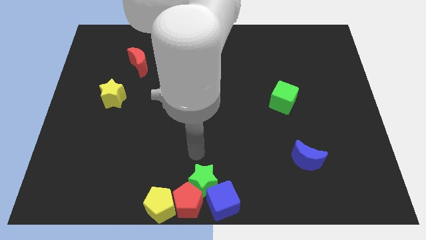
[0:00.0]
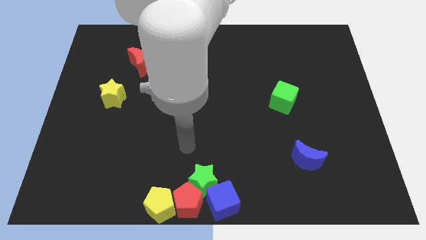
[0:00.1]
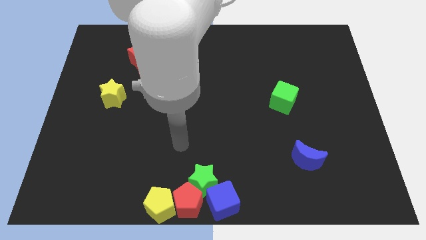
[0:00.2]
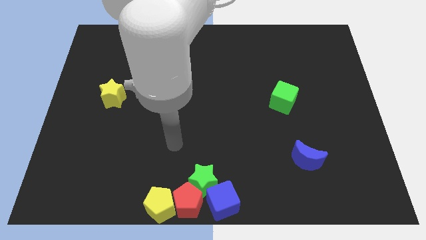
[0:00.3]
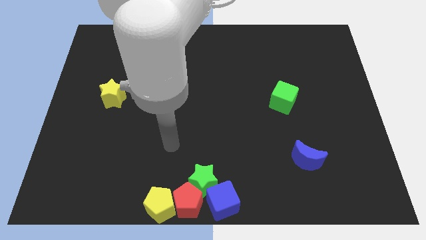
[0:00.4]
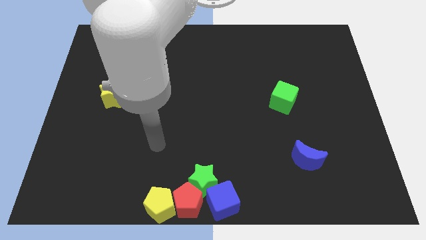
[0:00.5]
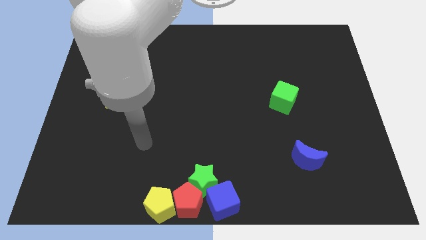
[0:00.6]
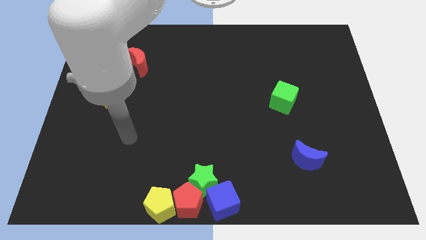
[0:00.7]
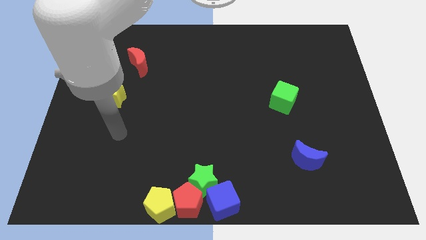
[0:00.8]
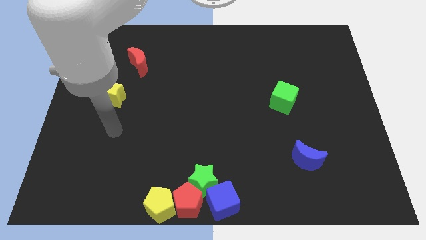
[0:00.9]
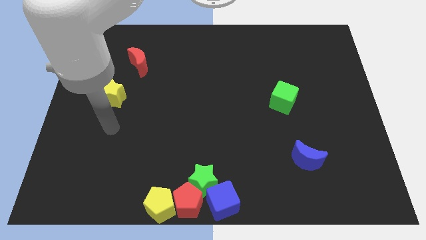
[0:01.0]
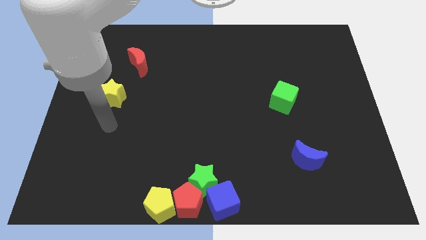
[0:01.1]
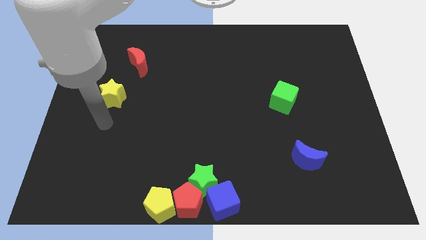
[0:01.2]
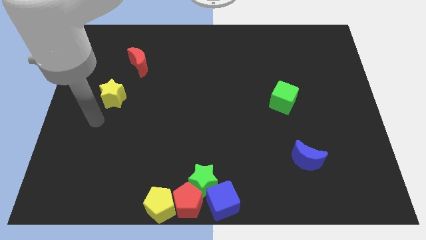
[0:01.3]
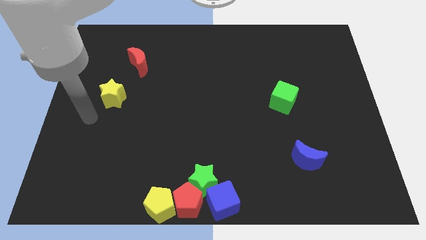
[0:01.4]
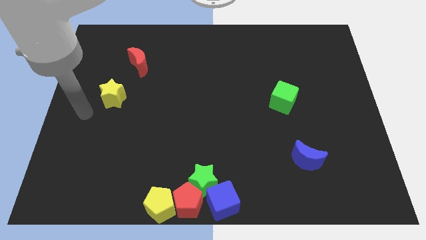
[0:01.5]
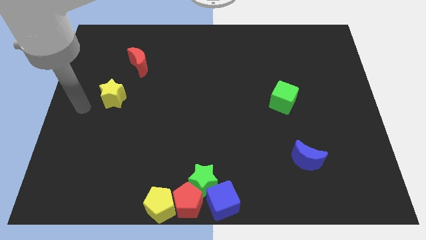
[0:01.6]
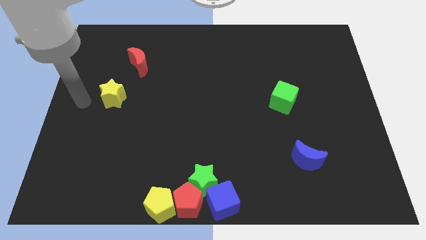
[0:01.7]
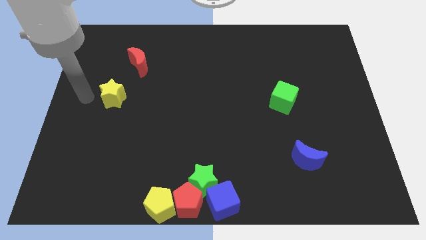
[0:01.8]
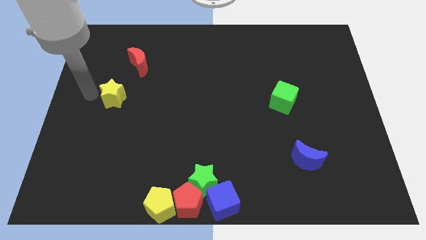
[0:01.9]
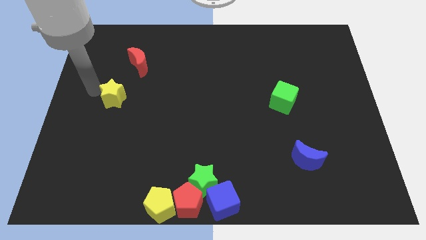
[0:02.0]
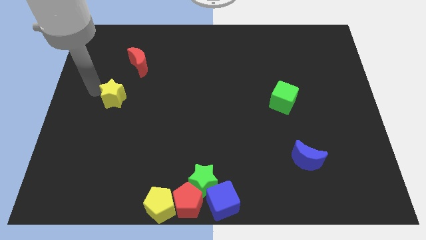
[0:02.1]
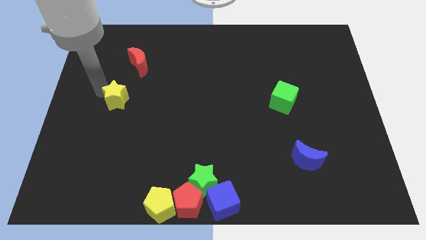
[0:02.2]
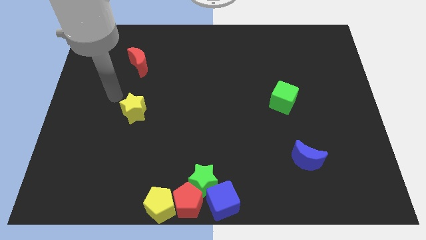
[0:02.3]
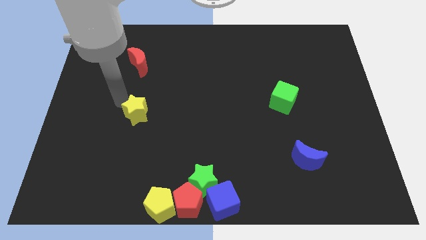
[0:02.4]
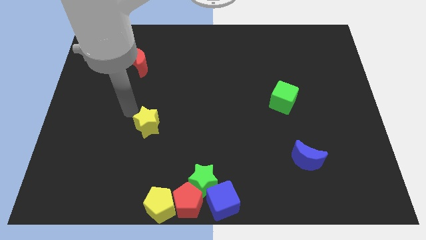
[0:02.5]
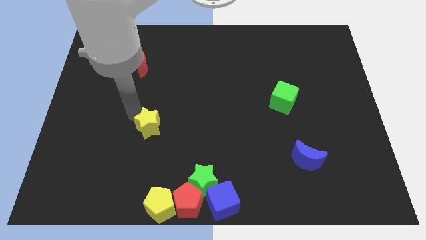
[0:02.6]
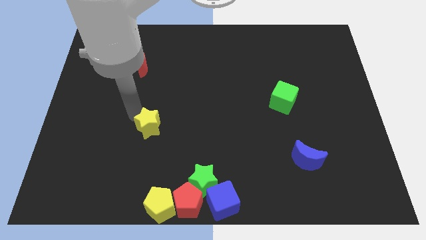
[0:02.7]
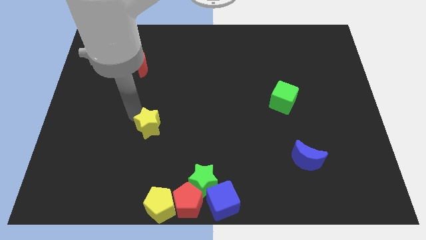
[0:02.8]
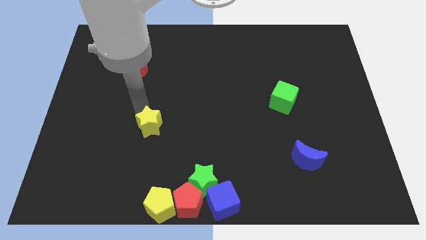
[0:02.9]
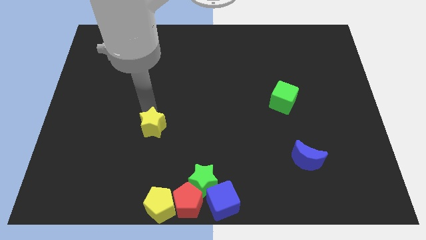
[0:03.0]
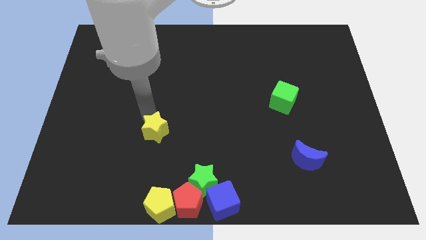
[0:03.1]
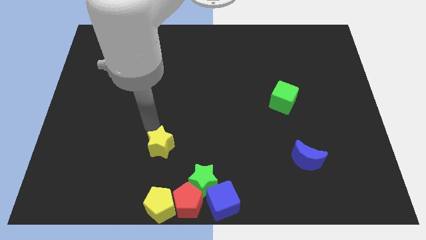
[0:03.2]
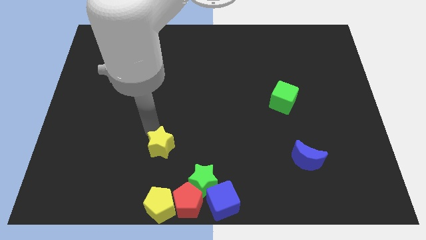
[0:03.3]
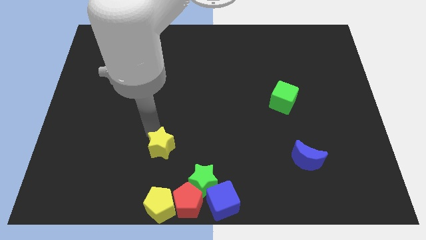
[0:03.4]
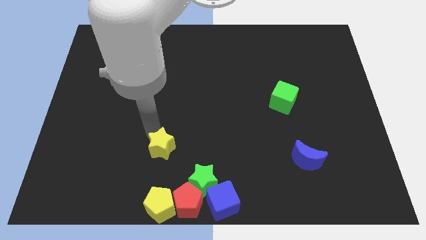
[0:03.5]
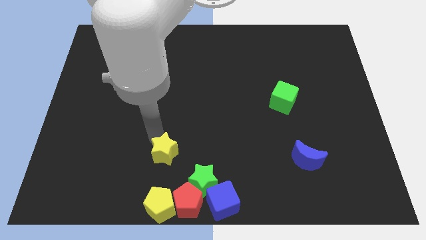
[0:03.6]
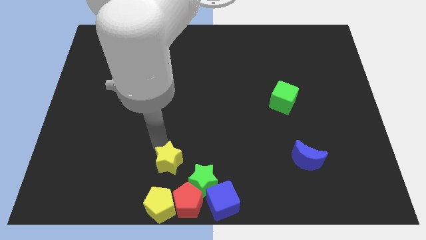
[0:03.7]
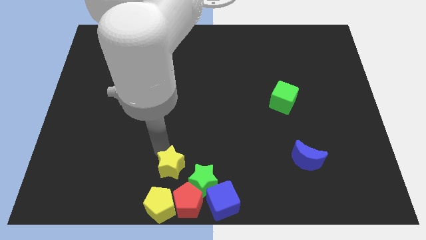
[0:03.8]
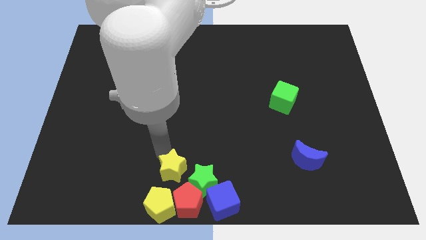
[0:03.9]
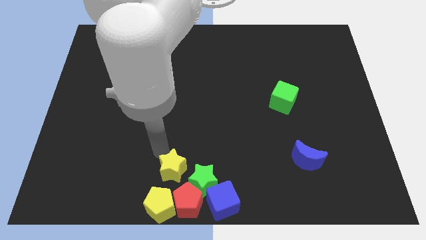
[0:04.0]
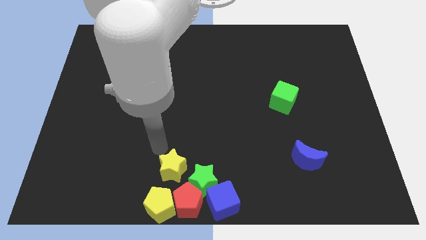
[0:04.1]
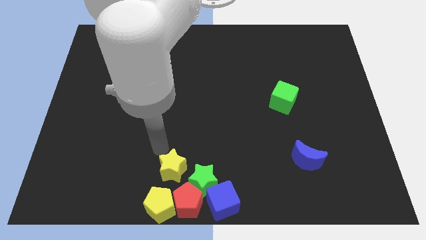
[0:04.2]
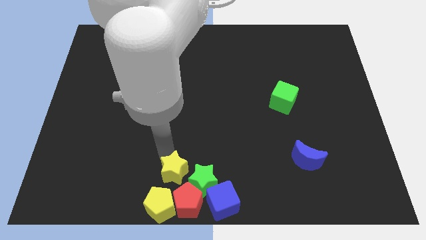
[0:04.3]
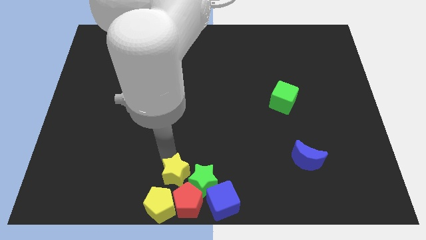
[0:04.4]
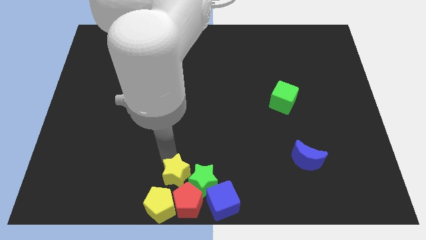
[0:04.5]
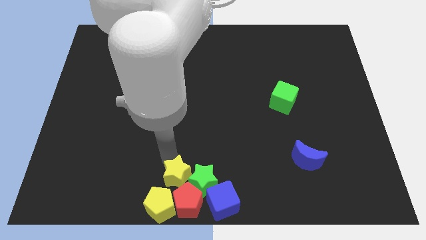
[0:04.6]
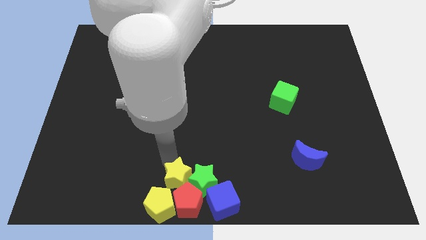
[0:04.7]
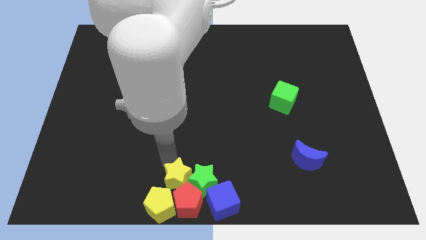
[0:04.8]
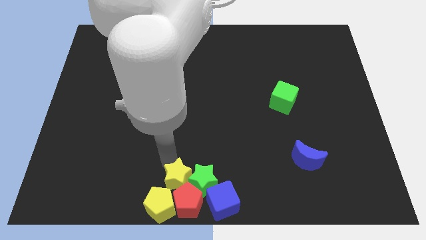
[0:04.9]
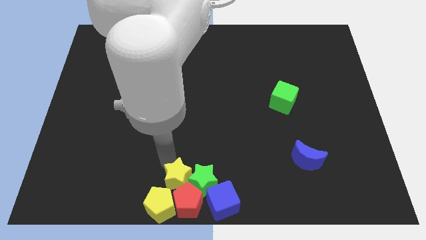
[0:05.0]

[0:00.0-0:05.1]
move the yellow pentagon add with the middle of the board objects

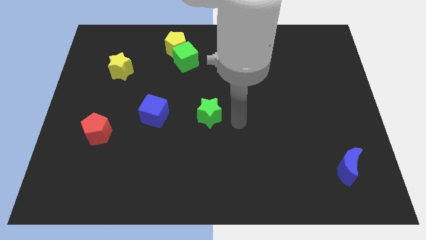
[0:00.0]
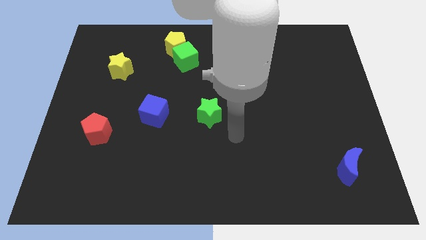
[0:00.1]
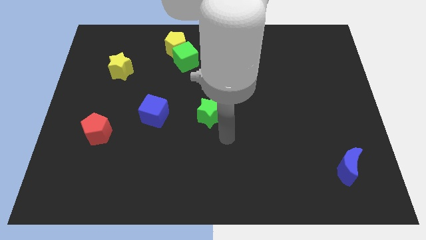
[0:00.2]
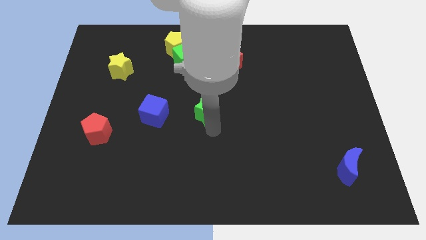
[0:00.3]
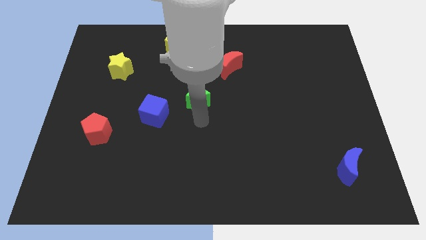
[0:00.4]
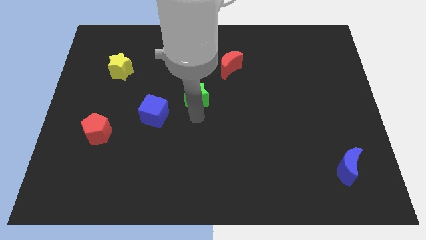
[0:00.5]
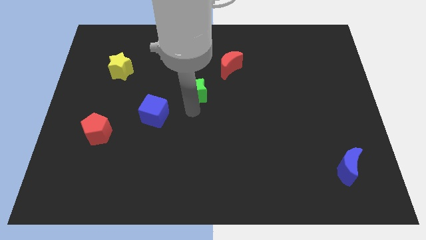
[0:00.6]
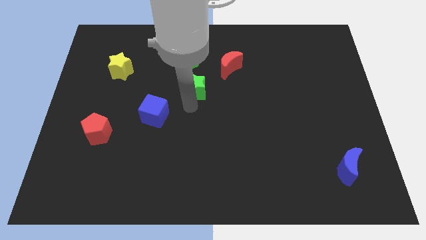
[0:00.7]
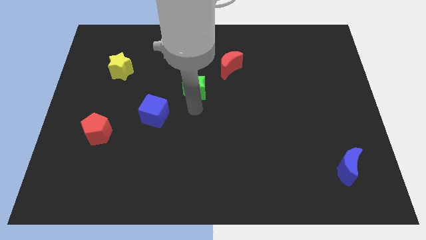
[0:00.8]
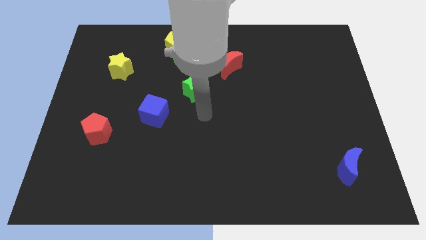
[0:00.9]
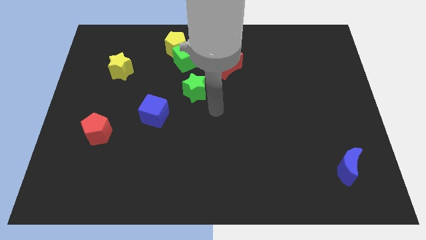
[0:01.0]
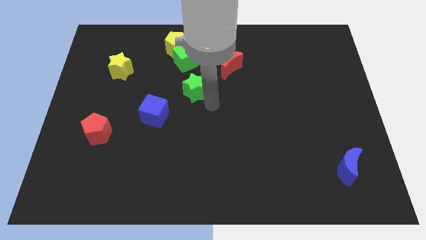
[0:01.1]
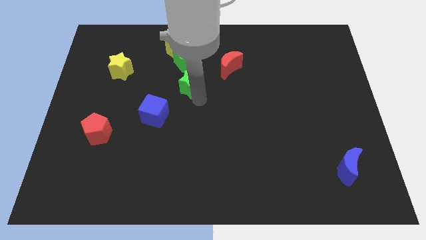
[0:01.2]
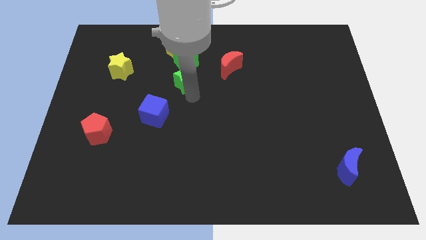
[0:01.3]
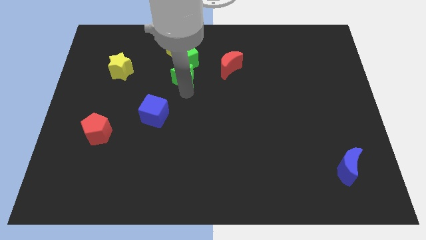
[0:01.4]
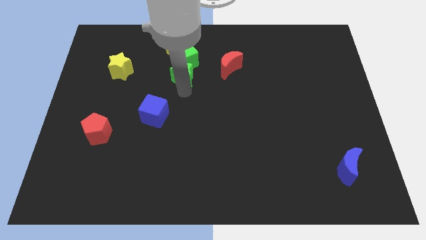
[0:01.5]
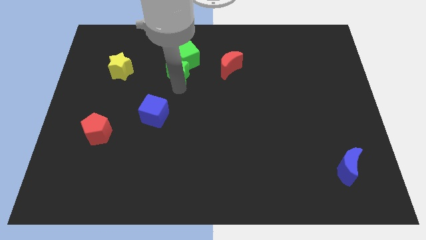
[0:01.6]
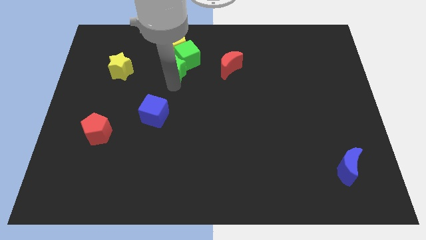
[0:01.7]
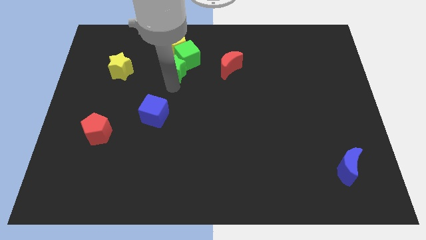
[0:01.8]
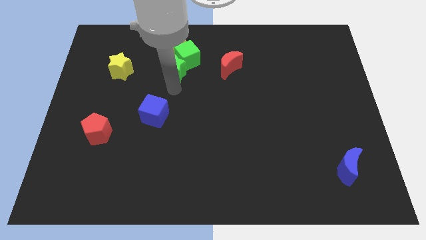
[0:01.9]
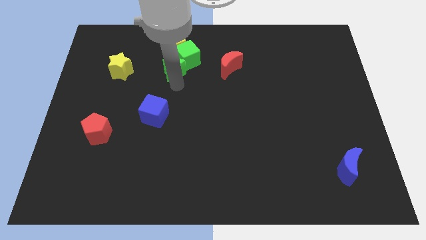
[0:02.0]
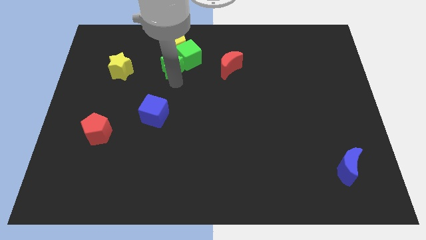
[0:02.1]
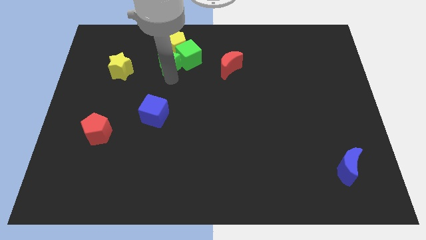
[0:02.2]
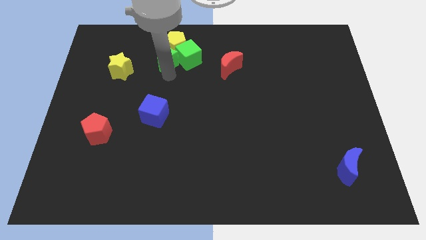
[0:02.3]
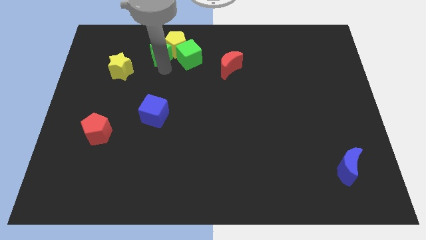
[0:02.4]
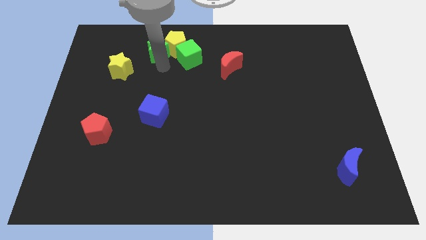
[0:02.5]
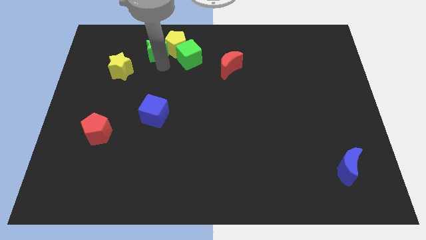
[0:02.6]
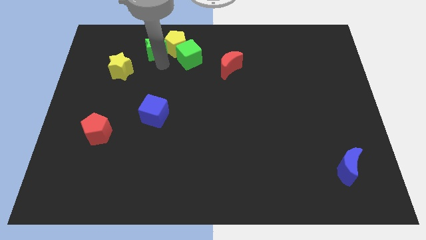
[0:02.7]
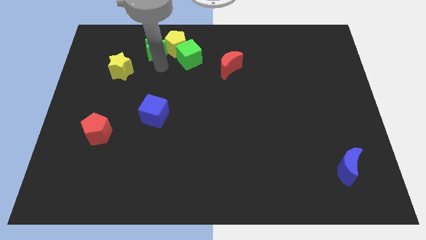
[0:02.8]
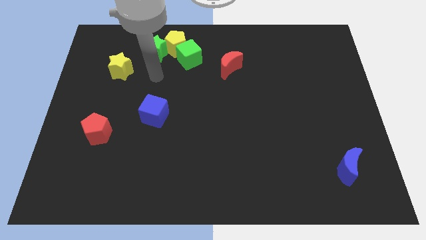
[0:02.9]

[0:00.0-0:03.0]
move the green star to the left of the yellow pentagon

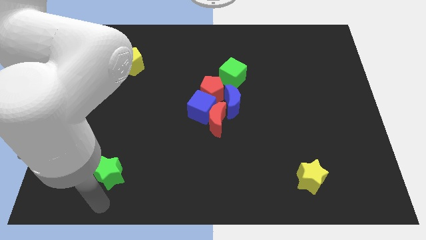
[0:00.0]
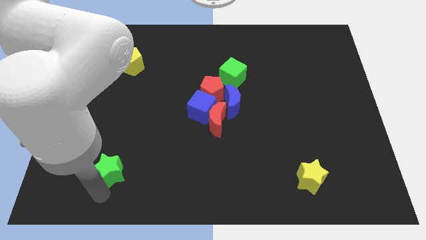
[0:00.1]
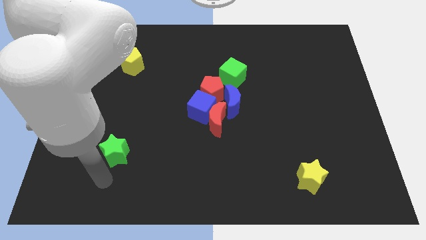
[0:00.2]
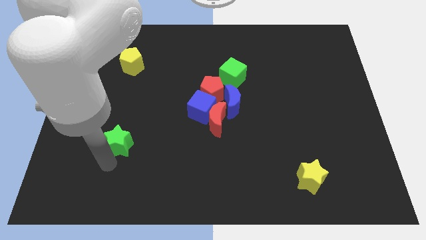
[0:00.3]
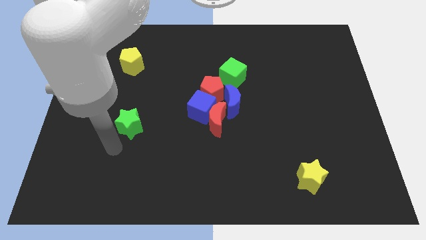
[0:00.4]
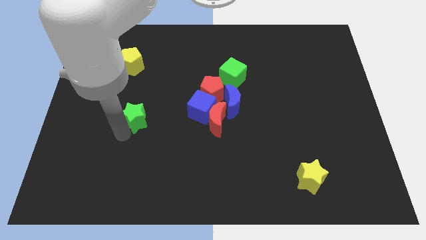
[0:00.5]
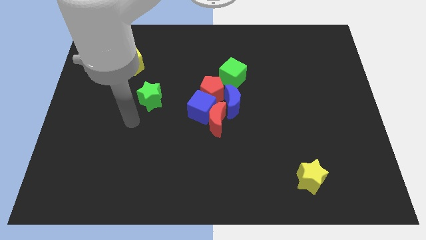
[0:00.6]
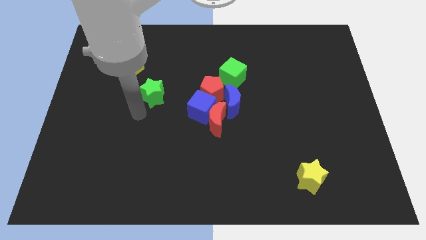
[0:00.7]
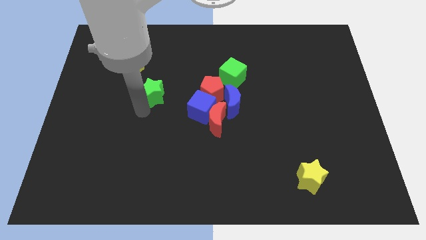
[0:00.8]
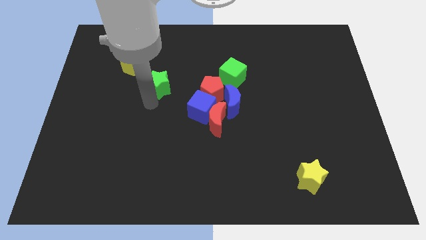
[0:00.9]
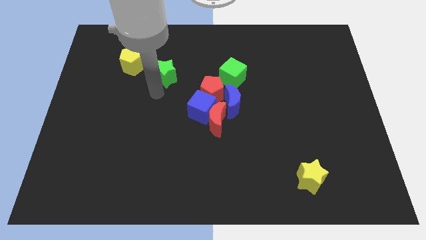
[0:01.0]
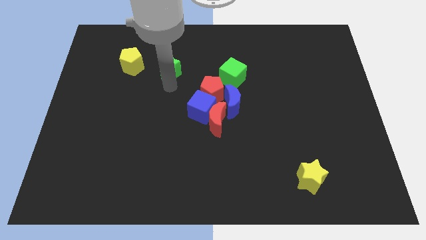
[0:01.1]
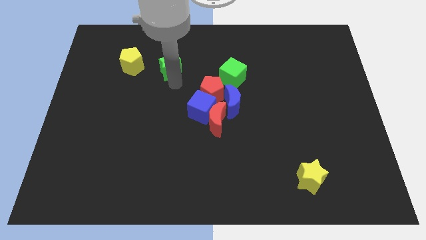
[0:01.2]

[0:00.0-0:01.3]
push the green star to the top
